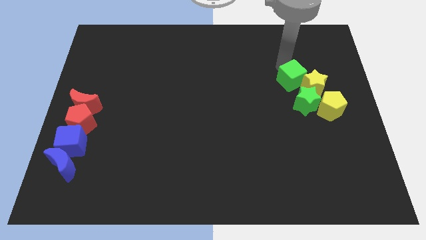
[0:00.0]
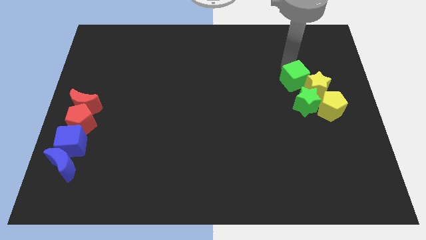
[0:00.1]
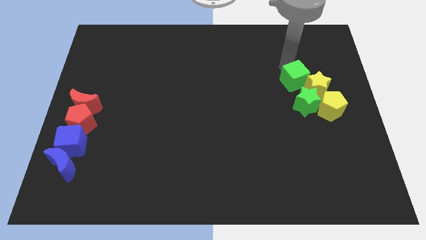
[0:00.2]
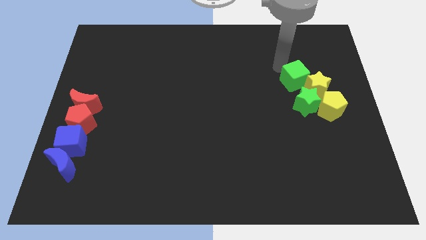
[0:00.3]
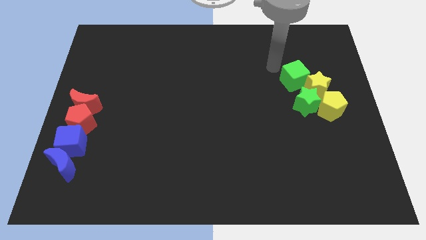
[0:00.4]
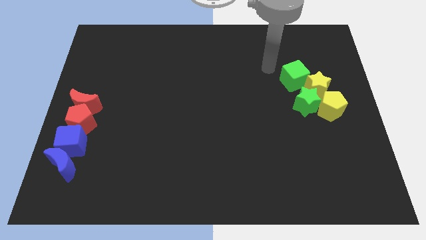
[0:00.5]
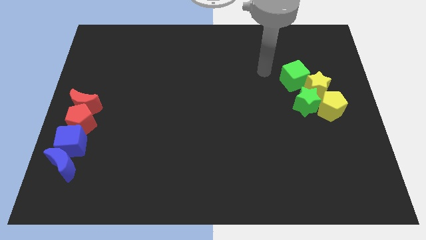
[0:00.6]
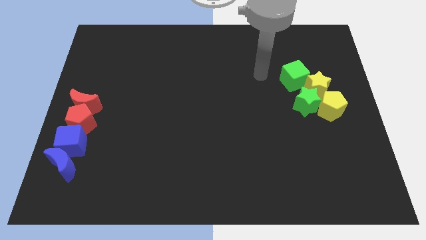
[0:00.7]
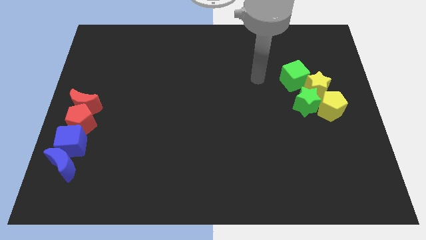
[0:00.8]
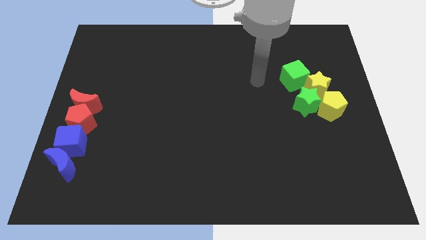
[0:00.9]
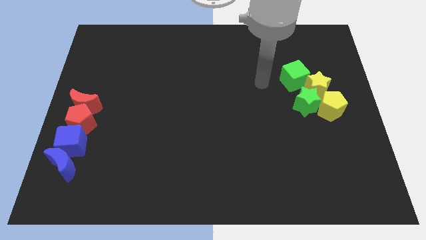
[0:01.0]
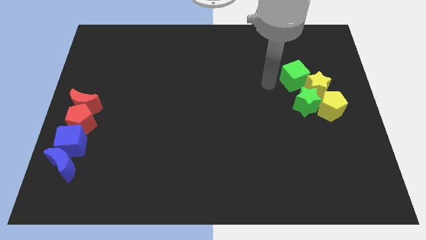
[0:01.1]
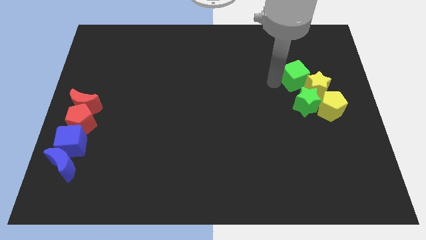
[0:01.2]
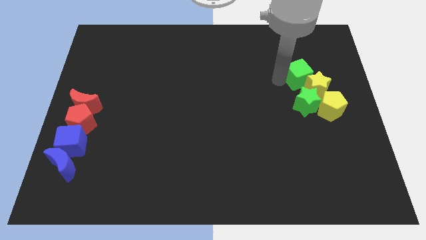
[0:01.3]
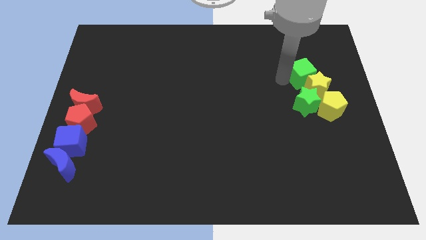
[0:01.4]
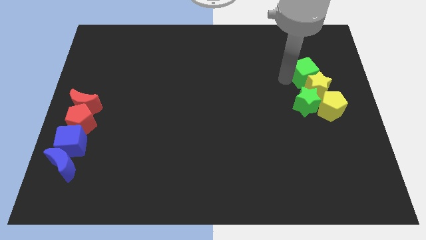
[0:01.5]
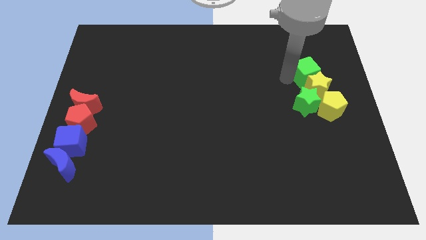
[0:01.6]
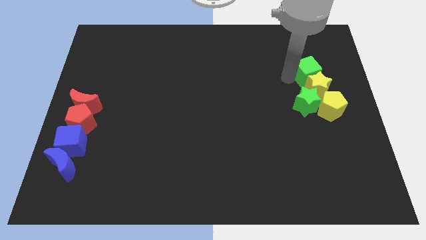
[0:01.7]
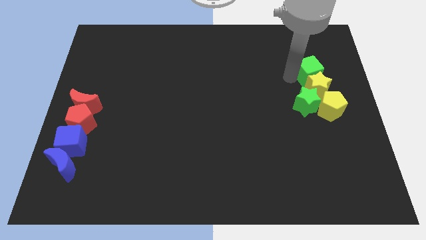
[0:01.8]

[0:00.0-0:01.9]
place the green cube above the yellow star

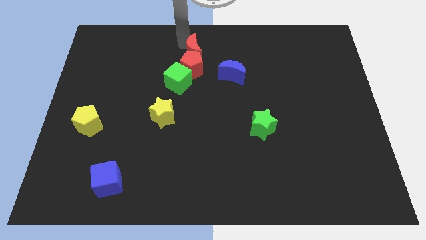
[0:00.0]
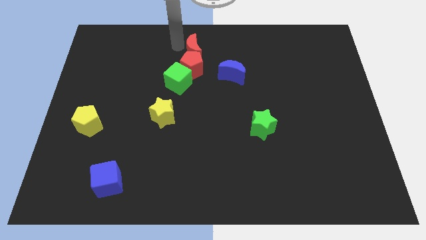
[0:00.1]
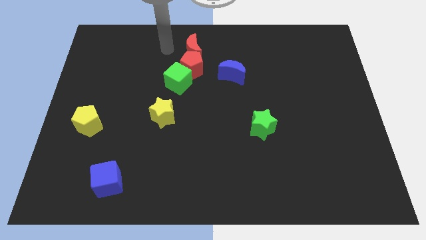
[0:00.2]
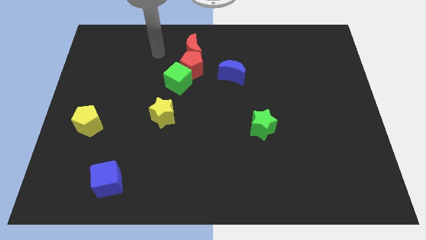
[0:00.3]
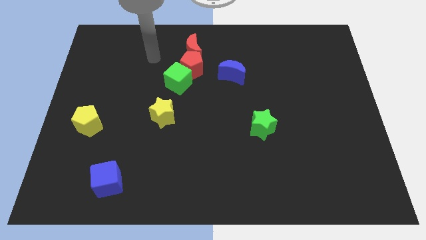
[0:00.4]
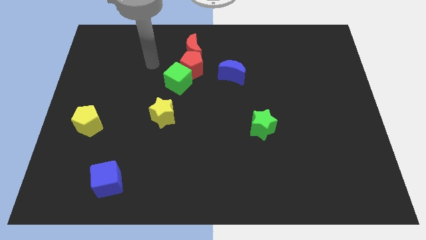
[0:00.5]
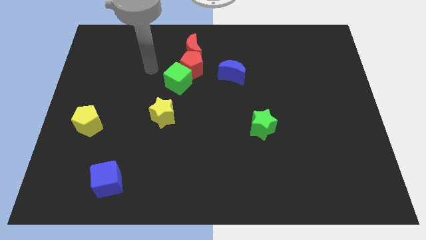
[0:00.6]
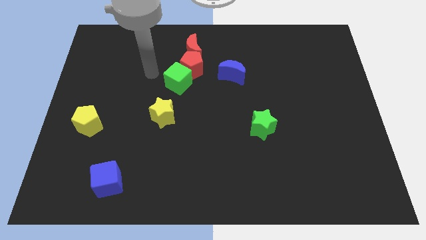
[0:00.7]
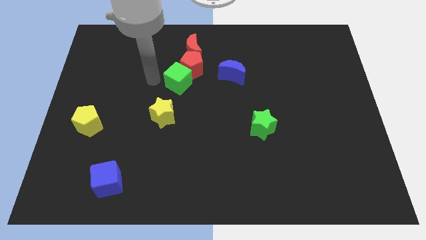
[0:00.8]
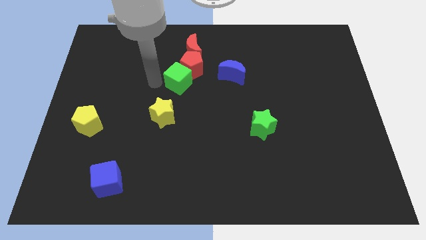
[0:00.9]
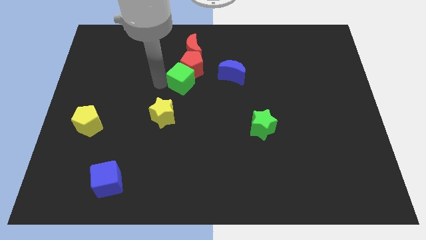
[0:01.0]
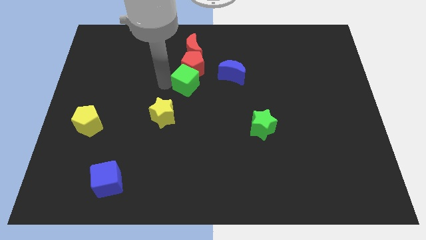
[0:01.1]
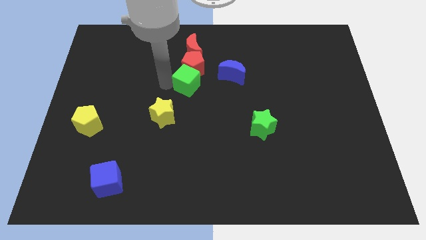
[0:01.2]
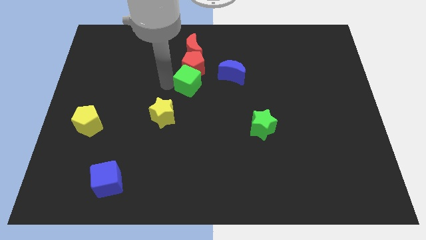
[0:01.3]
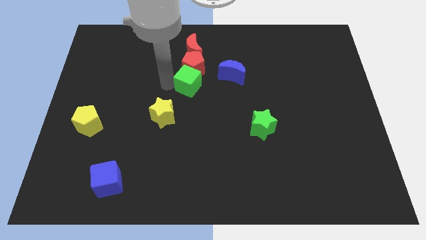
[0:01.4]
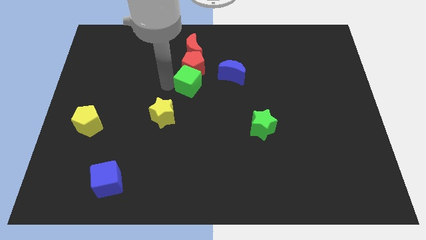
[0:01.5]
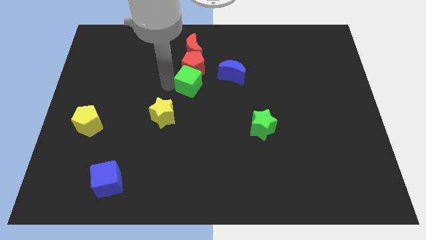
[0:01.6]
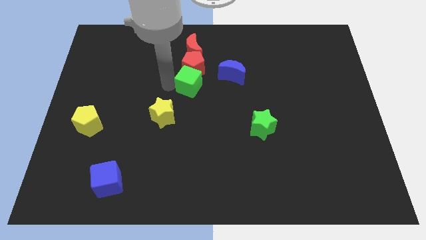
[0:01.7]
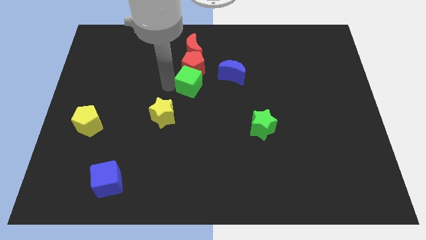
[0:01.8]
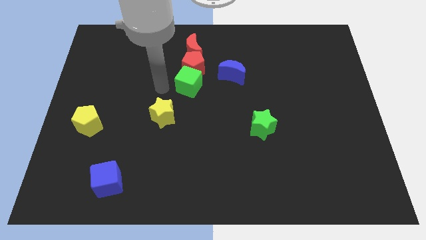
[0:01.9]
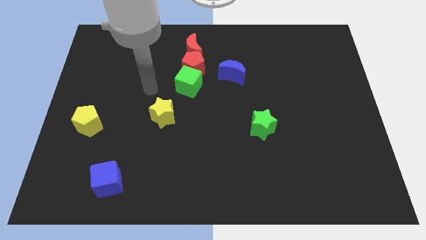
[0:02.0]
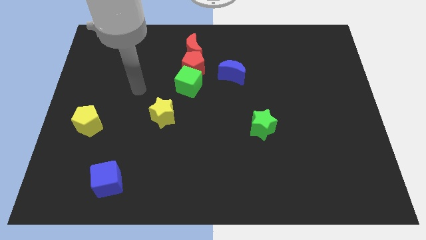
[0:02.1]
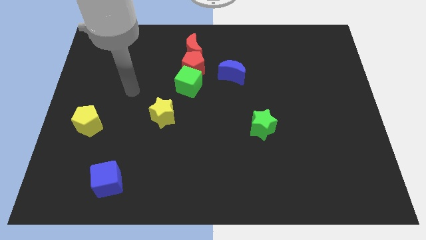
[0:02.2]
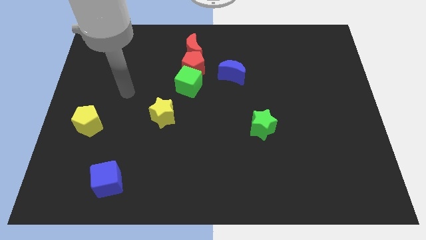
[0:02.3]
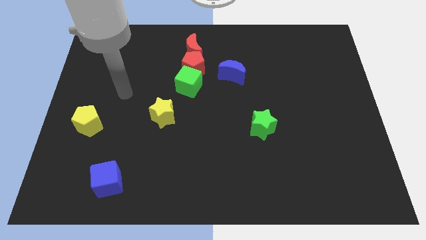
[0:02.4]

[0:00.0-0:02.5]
move the green cube diagonally to the bottom left to the blue moon

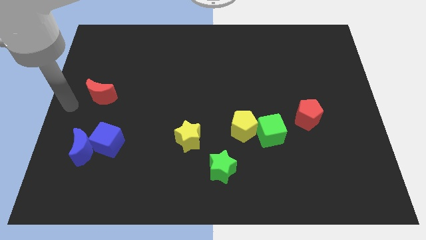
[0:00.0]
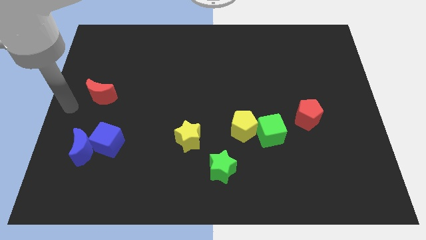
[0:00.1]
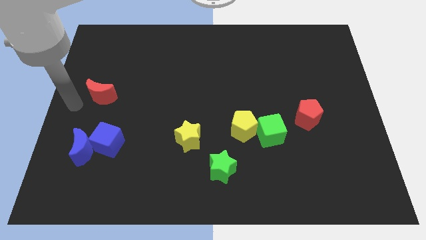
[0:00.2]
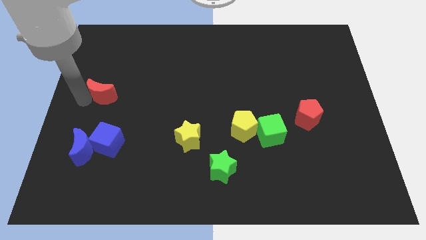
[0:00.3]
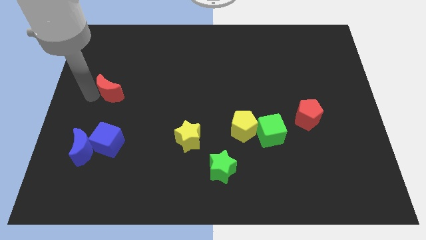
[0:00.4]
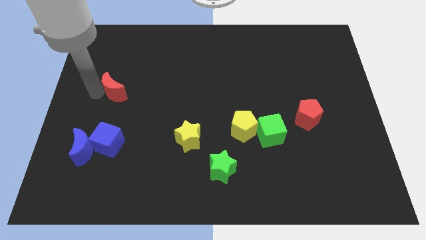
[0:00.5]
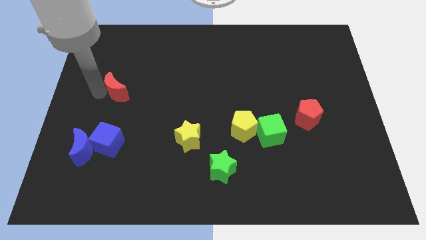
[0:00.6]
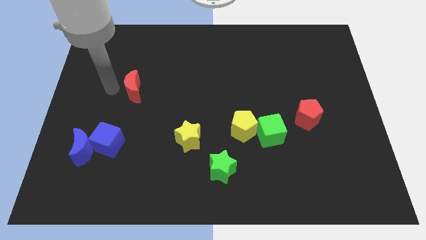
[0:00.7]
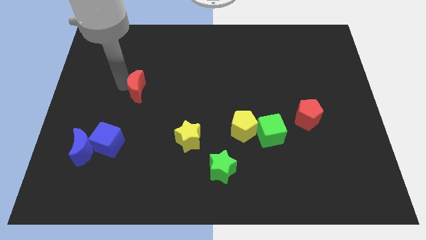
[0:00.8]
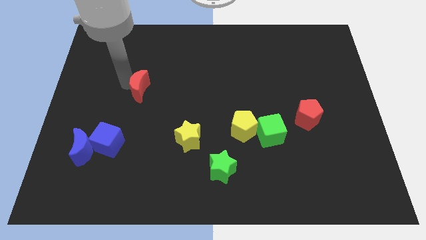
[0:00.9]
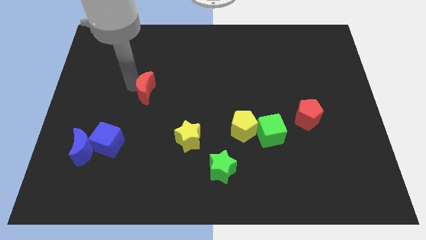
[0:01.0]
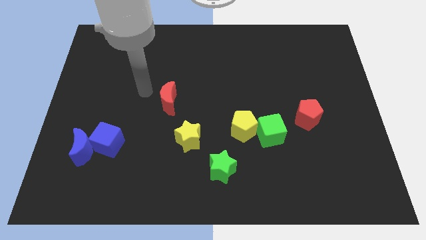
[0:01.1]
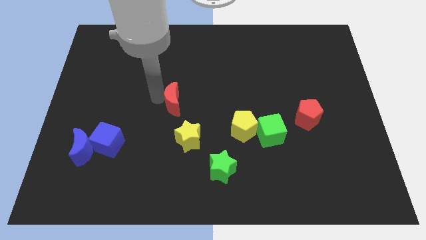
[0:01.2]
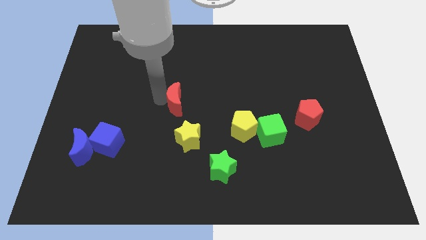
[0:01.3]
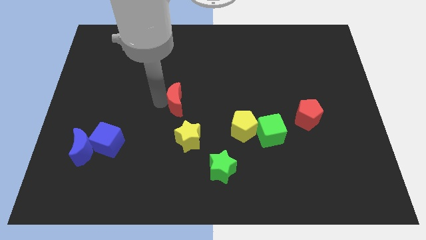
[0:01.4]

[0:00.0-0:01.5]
push red crescent above yellow star

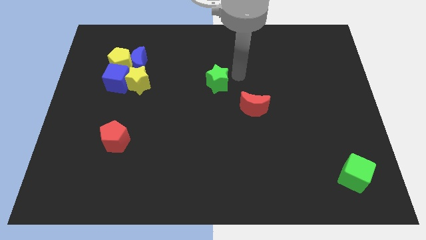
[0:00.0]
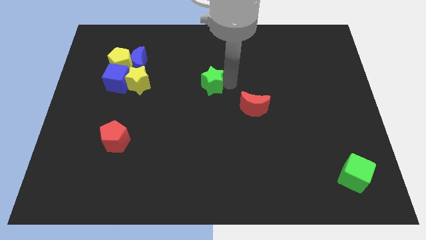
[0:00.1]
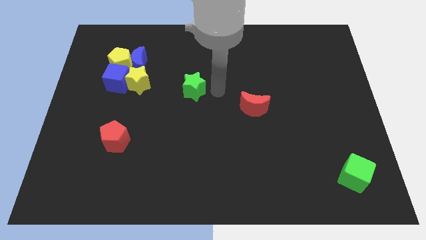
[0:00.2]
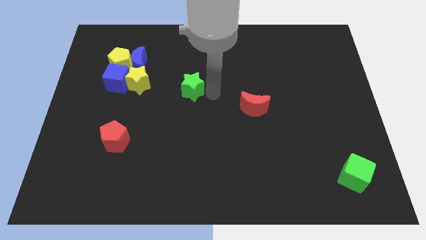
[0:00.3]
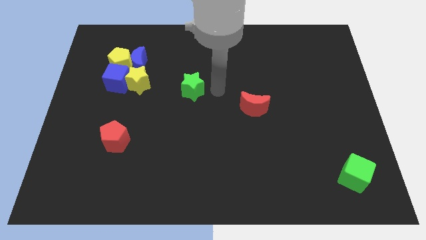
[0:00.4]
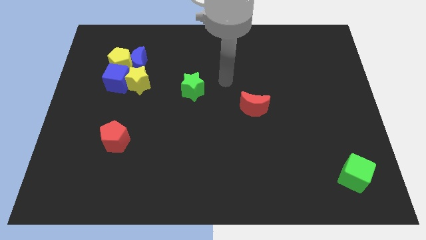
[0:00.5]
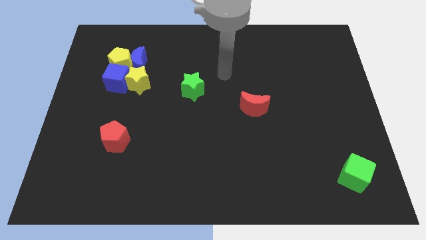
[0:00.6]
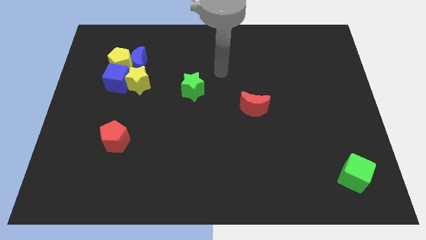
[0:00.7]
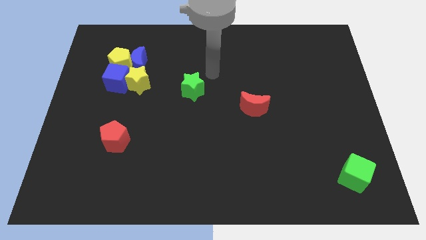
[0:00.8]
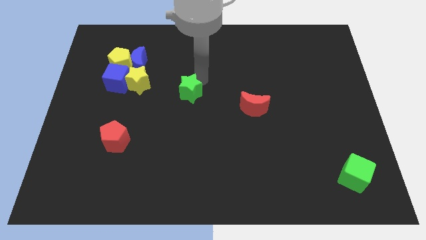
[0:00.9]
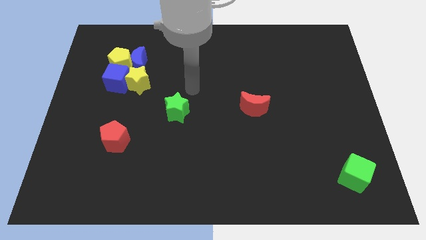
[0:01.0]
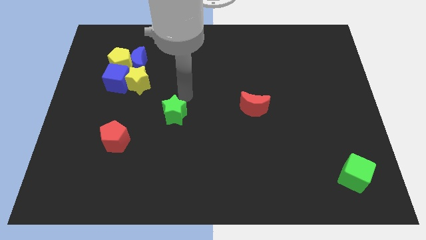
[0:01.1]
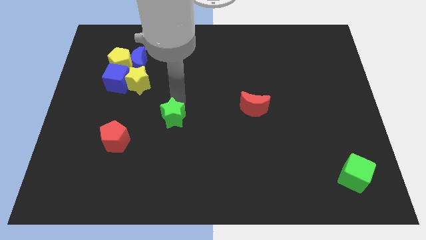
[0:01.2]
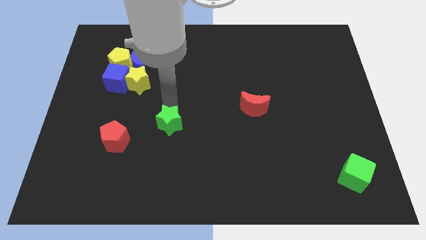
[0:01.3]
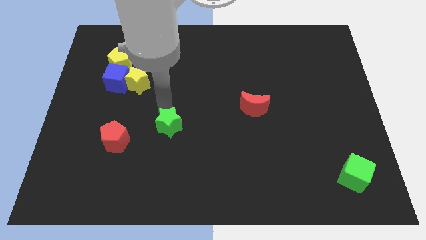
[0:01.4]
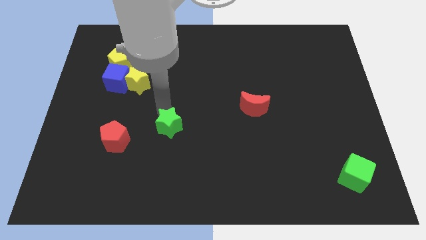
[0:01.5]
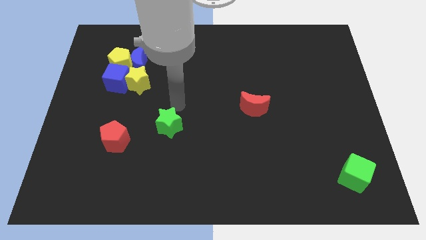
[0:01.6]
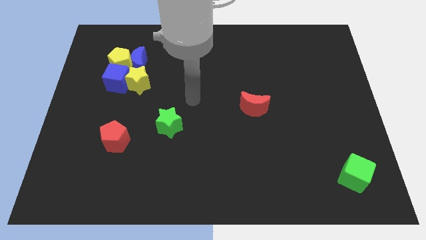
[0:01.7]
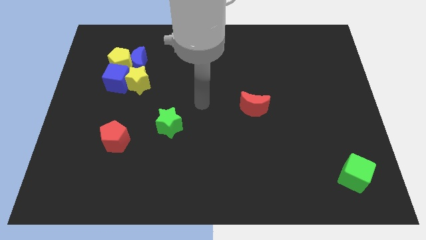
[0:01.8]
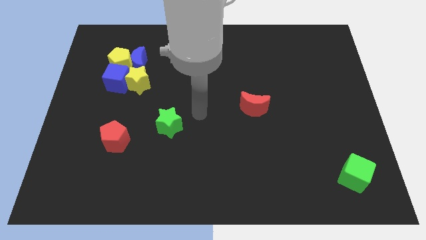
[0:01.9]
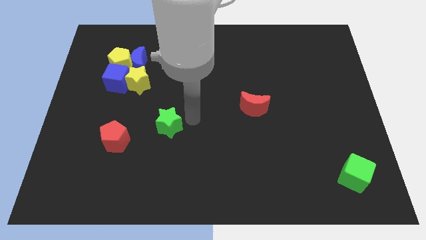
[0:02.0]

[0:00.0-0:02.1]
push green star diagonal to the right of the red pentagon

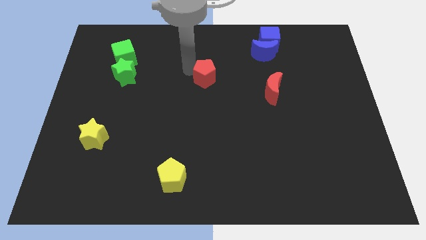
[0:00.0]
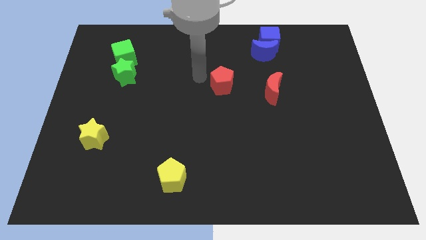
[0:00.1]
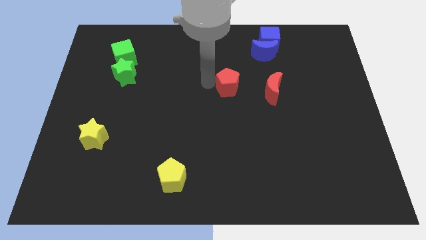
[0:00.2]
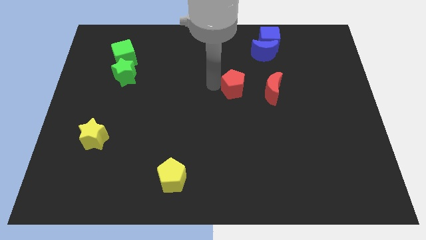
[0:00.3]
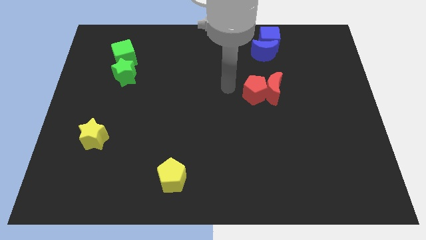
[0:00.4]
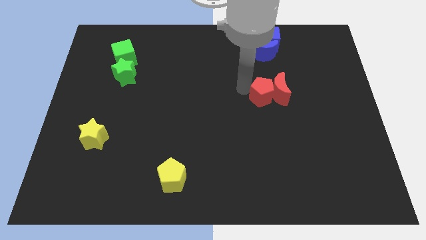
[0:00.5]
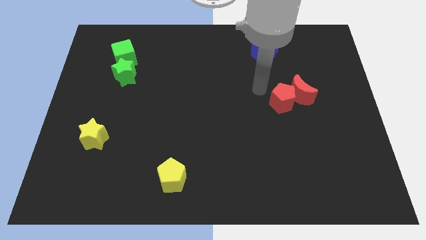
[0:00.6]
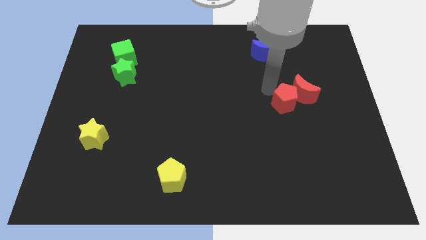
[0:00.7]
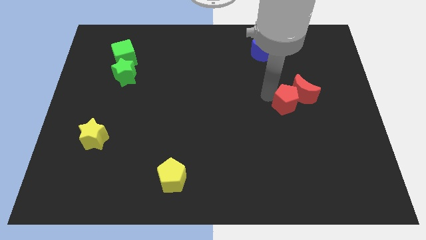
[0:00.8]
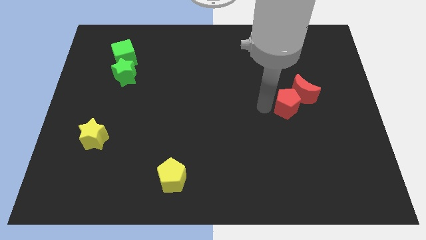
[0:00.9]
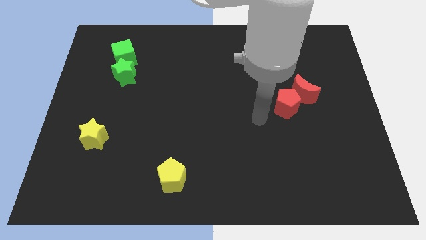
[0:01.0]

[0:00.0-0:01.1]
push the red pentagon into the red crescent
